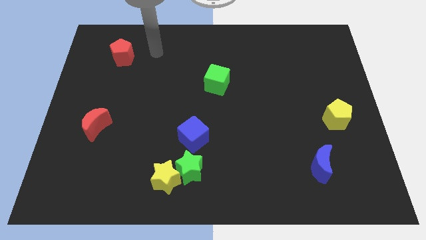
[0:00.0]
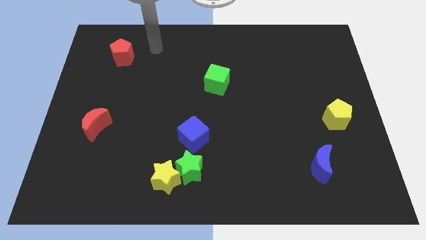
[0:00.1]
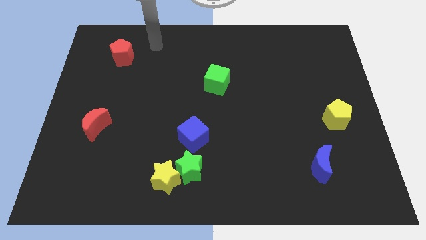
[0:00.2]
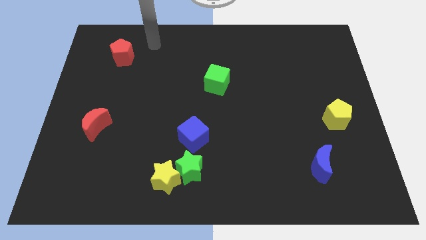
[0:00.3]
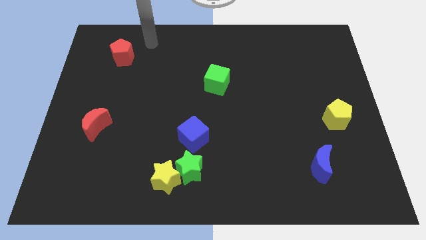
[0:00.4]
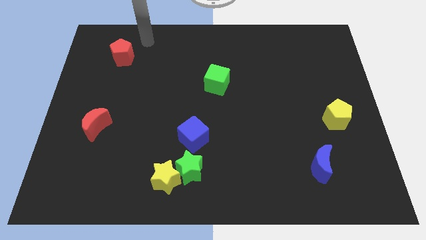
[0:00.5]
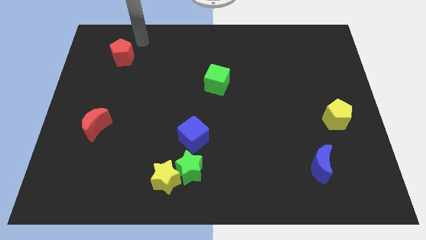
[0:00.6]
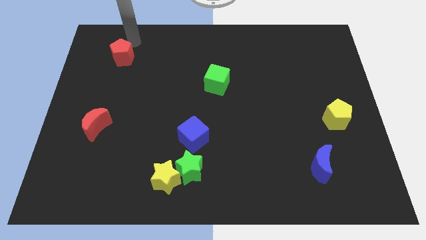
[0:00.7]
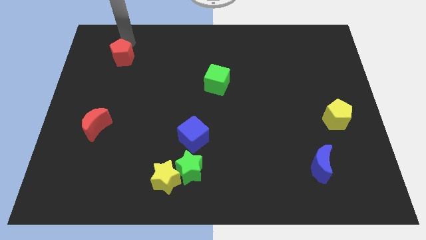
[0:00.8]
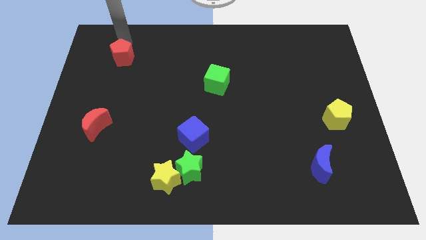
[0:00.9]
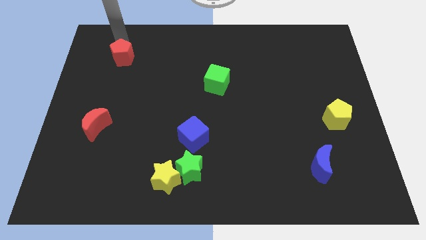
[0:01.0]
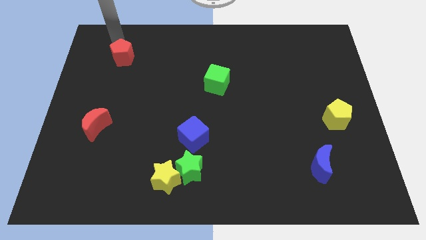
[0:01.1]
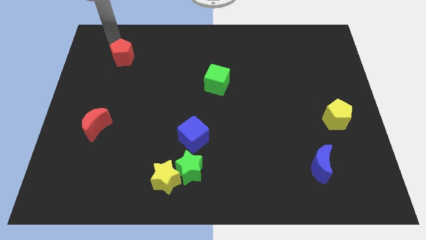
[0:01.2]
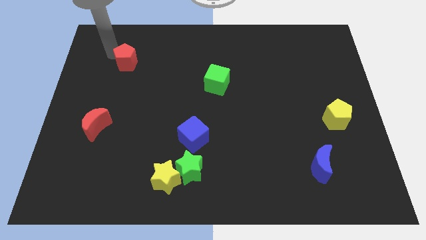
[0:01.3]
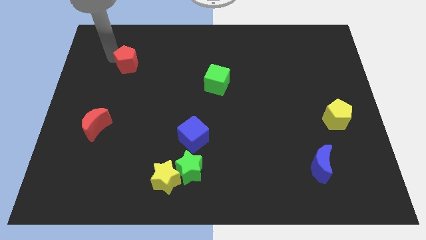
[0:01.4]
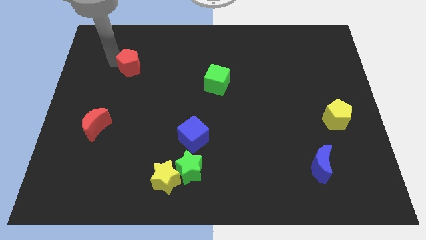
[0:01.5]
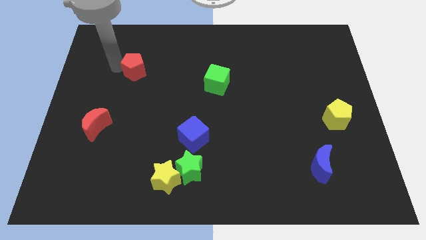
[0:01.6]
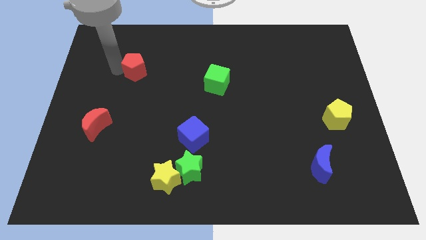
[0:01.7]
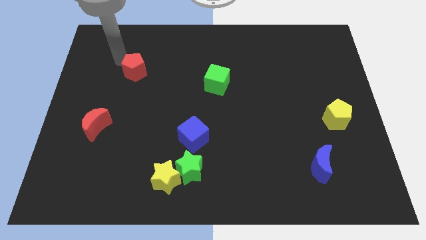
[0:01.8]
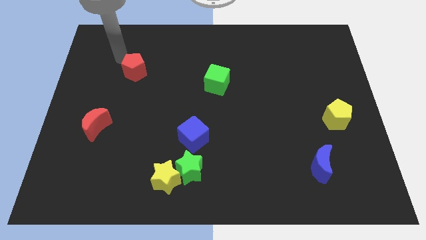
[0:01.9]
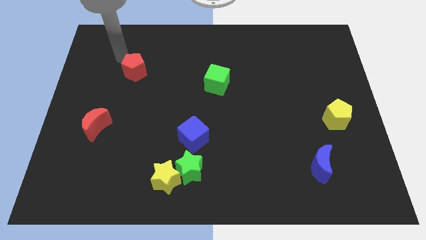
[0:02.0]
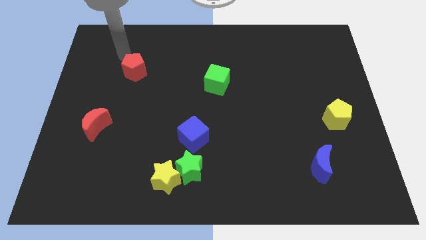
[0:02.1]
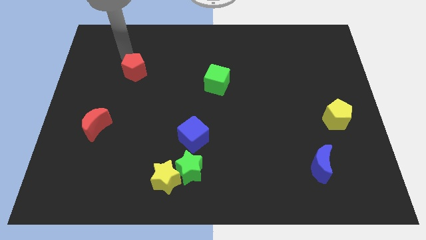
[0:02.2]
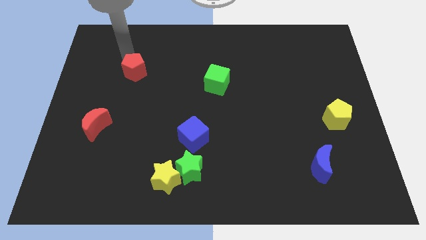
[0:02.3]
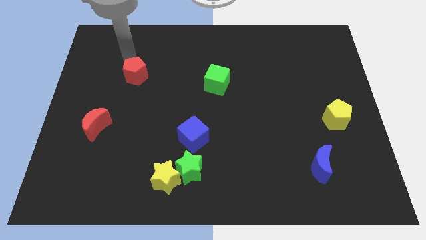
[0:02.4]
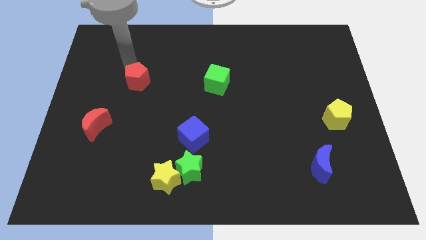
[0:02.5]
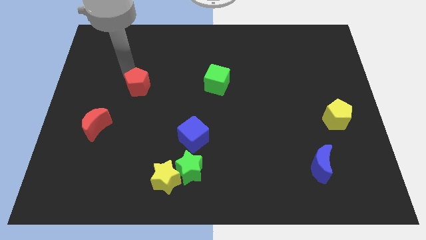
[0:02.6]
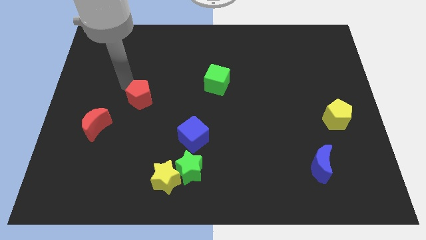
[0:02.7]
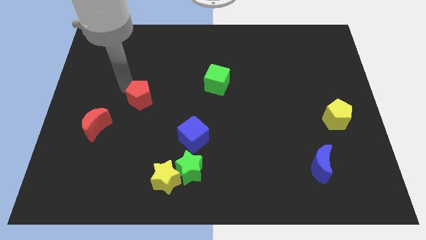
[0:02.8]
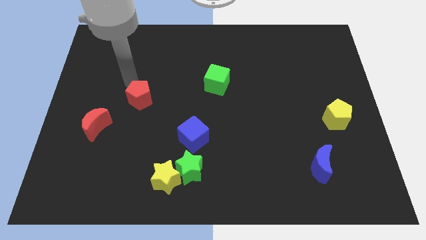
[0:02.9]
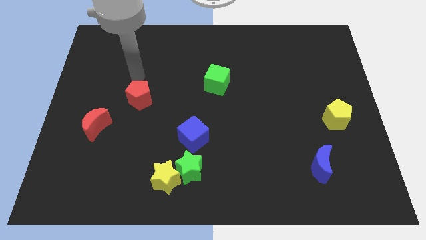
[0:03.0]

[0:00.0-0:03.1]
drag red pentagon to top right of red crescent

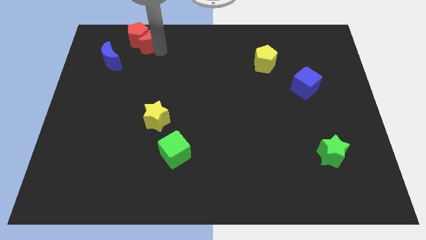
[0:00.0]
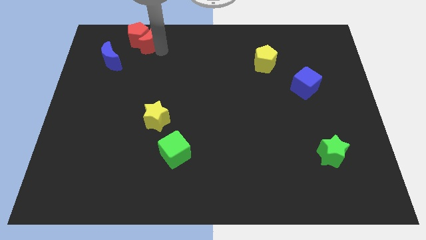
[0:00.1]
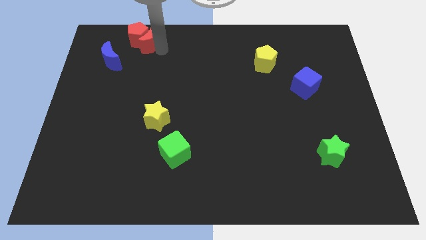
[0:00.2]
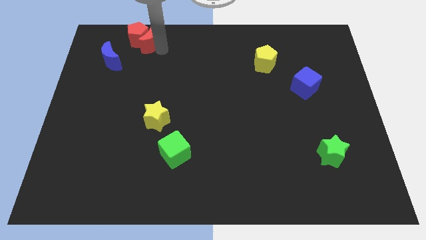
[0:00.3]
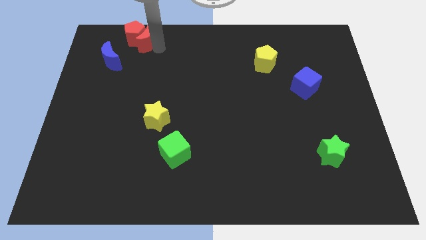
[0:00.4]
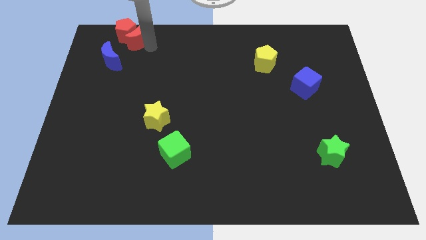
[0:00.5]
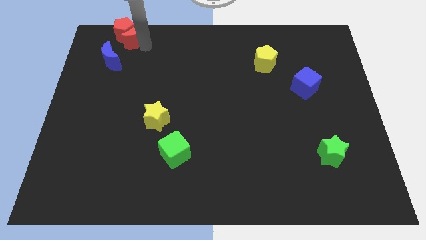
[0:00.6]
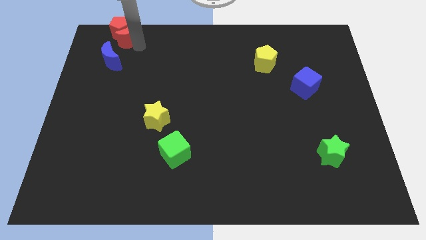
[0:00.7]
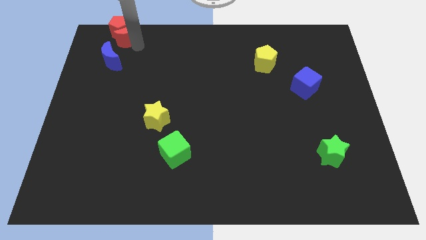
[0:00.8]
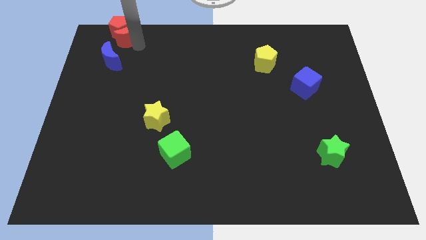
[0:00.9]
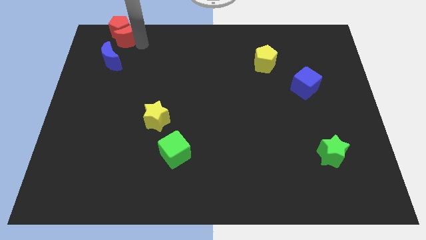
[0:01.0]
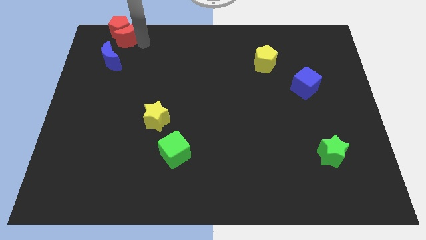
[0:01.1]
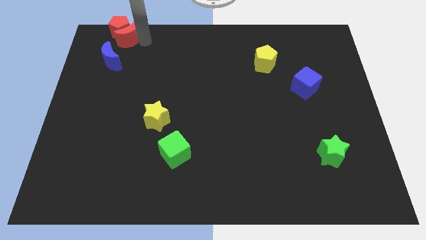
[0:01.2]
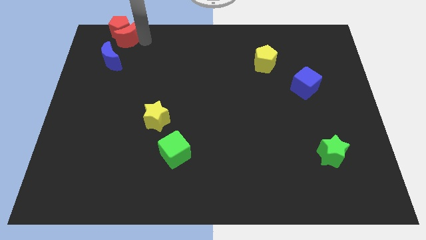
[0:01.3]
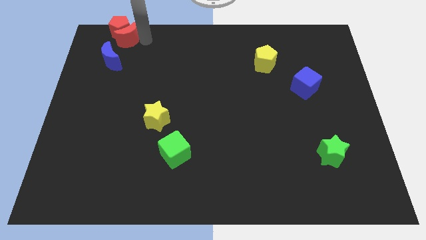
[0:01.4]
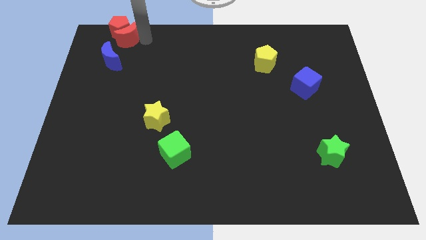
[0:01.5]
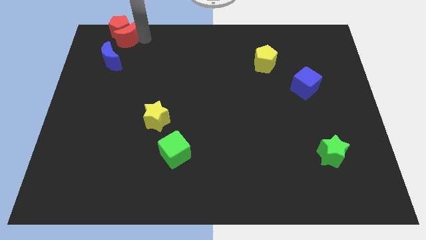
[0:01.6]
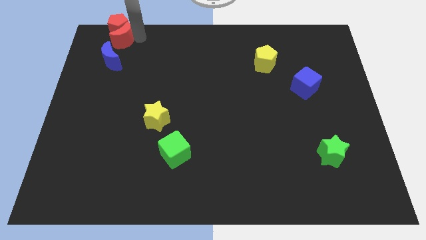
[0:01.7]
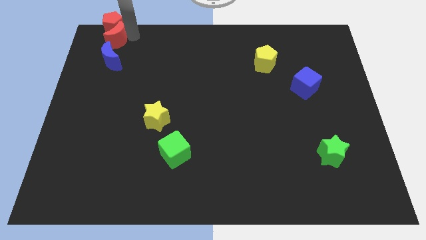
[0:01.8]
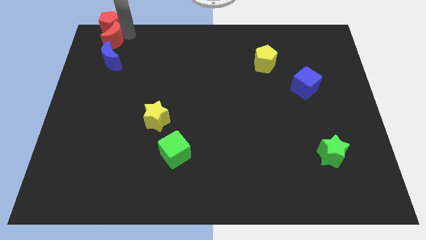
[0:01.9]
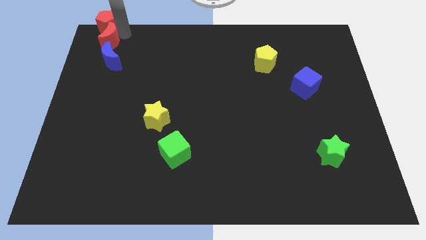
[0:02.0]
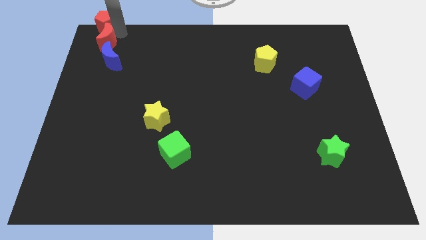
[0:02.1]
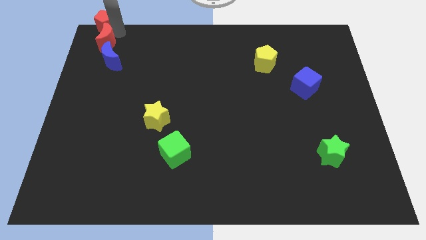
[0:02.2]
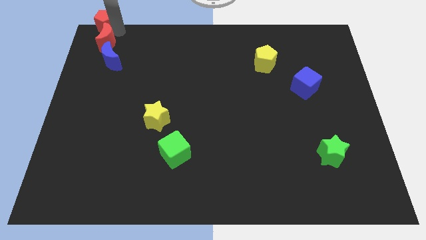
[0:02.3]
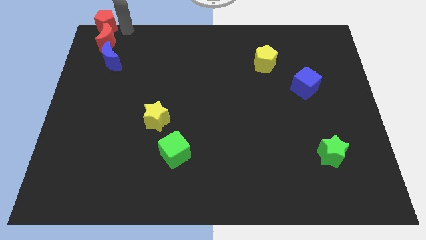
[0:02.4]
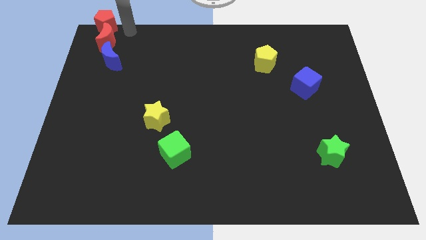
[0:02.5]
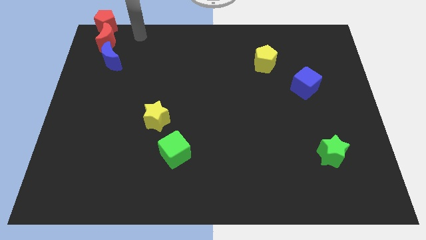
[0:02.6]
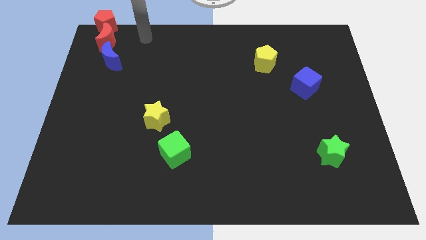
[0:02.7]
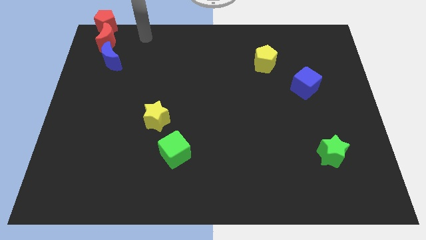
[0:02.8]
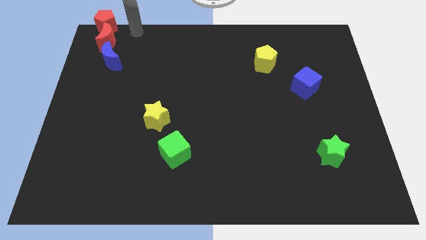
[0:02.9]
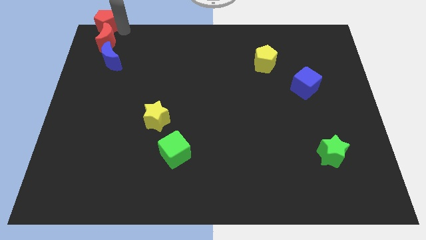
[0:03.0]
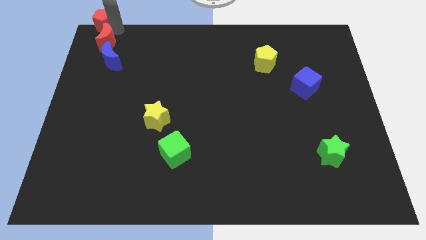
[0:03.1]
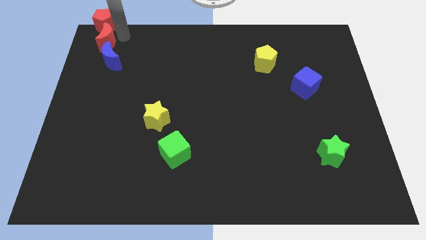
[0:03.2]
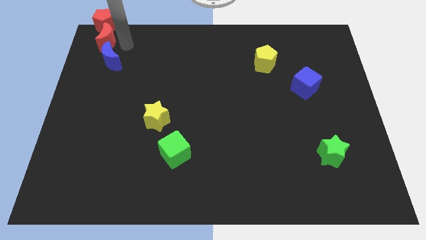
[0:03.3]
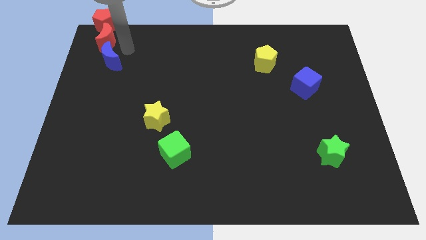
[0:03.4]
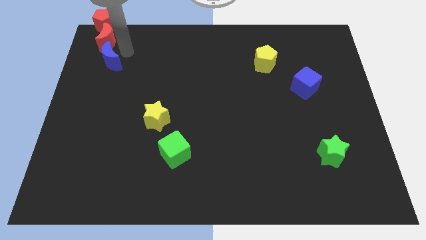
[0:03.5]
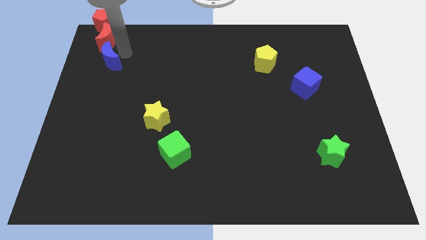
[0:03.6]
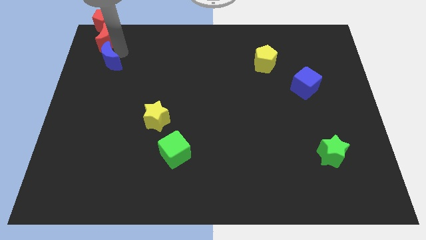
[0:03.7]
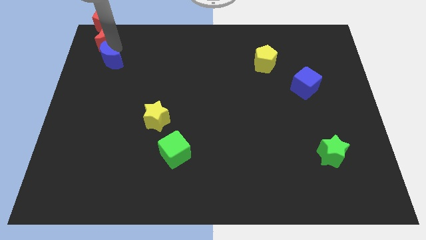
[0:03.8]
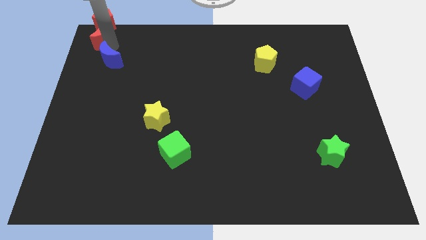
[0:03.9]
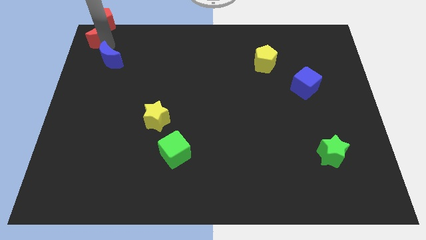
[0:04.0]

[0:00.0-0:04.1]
place the red blocks above the blue crescent

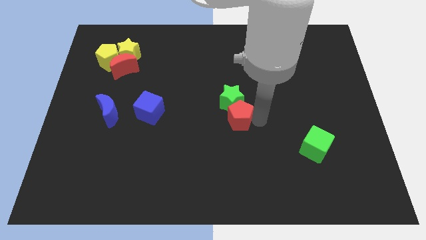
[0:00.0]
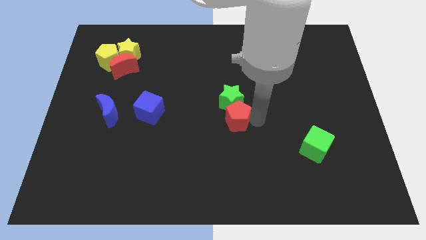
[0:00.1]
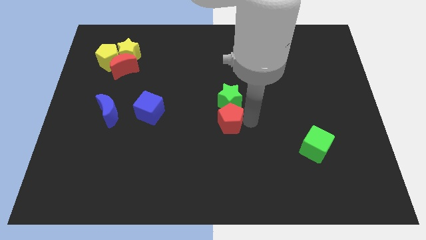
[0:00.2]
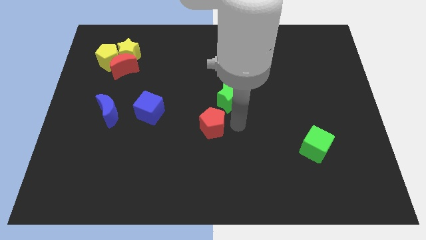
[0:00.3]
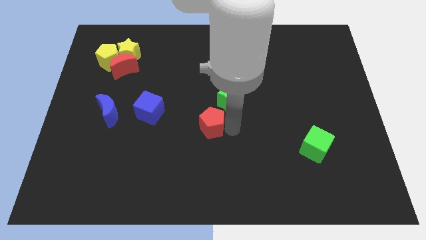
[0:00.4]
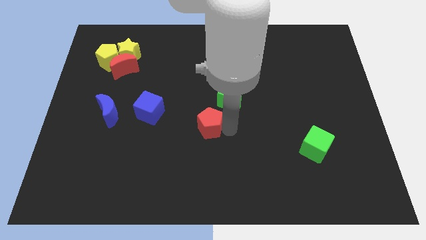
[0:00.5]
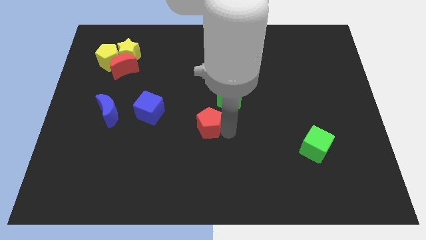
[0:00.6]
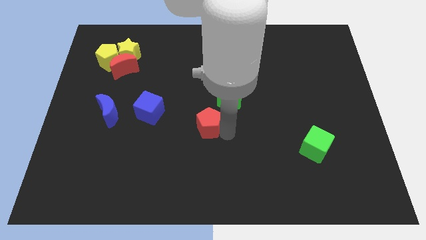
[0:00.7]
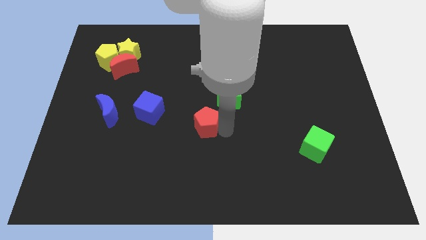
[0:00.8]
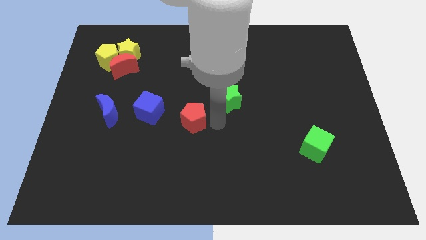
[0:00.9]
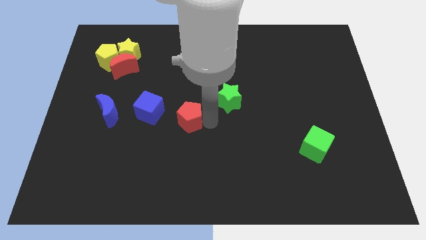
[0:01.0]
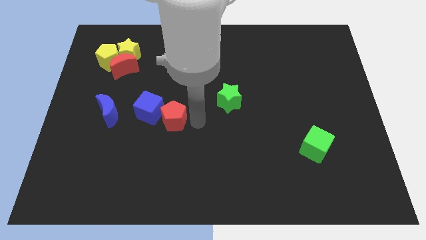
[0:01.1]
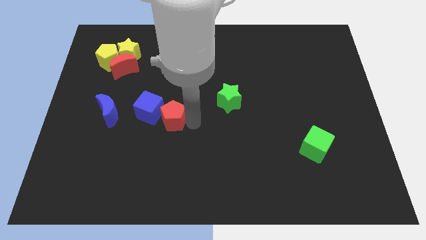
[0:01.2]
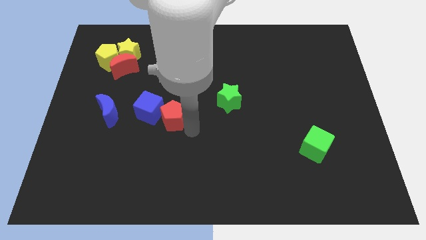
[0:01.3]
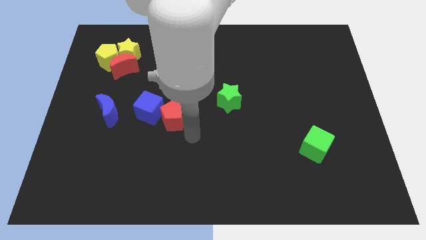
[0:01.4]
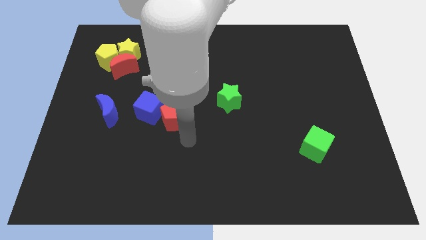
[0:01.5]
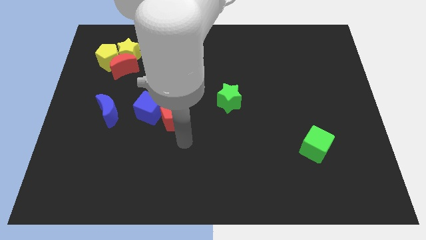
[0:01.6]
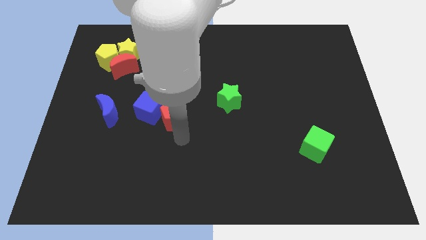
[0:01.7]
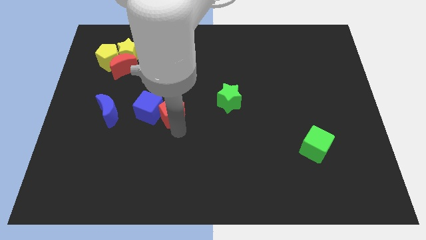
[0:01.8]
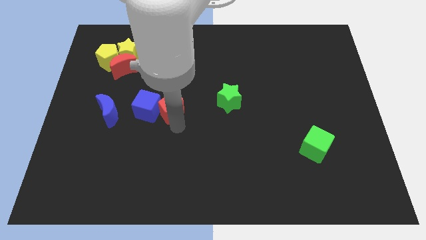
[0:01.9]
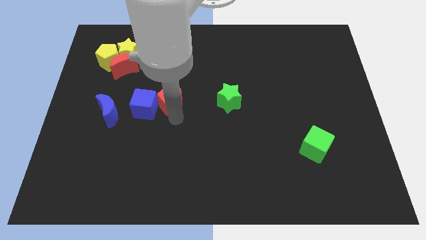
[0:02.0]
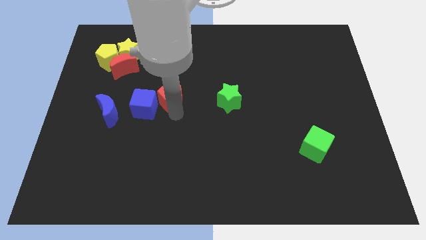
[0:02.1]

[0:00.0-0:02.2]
move red pentagon beside blue cube
